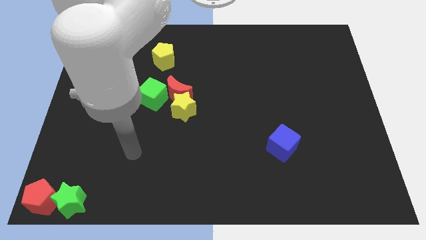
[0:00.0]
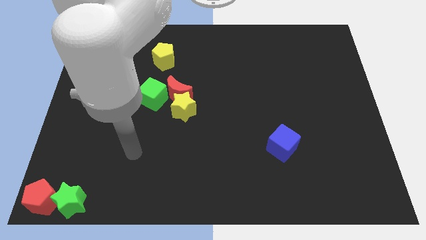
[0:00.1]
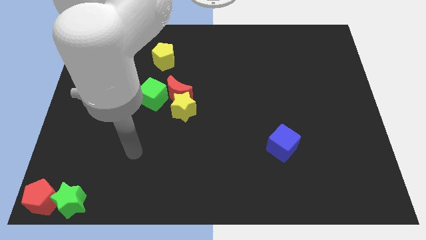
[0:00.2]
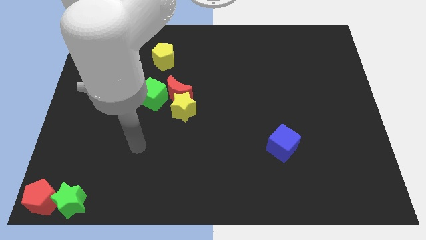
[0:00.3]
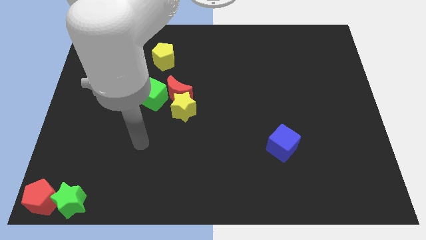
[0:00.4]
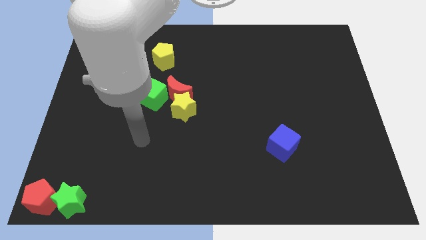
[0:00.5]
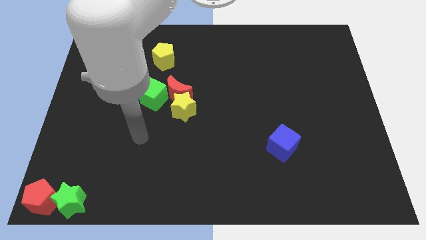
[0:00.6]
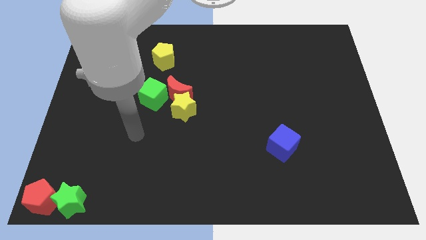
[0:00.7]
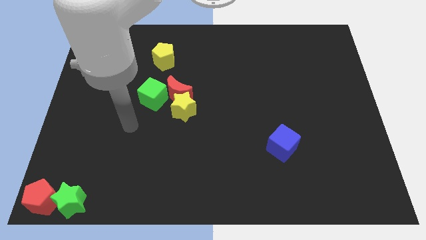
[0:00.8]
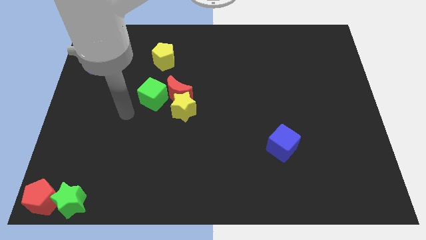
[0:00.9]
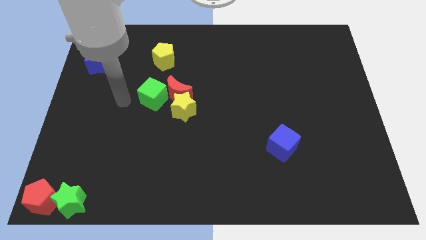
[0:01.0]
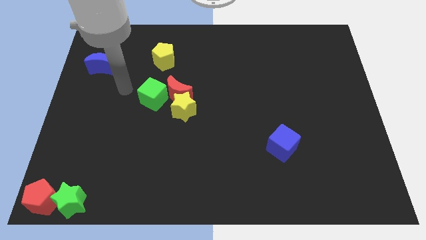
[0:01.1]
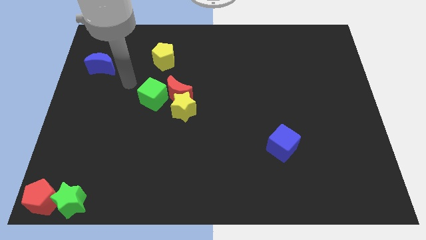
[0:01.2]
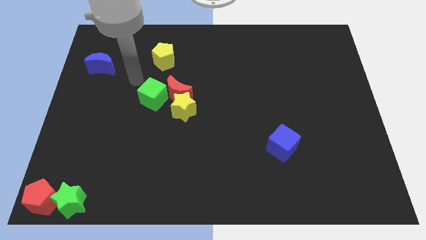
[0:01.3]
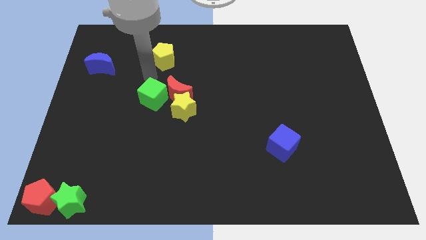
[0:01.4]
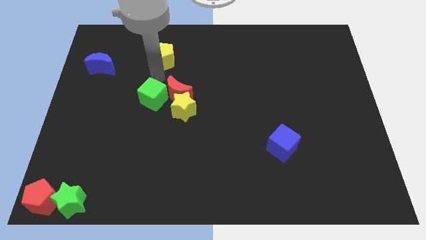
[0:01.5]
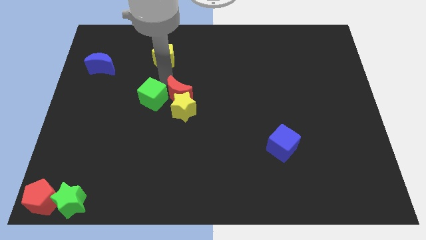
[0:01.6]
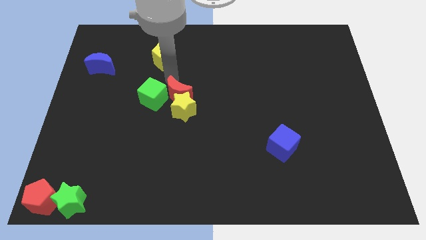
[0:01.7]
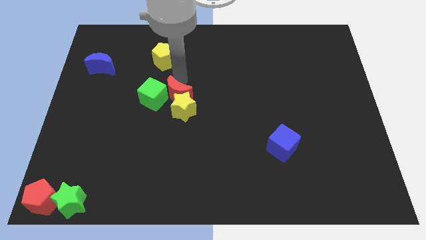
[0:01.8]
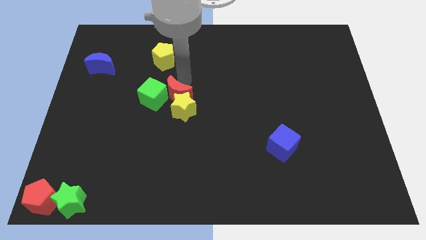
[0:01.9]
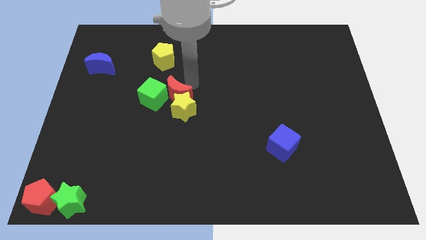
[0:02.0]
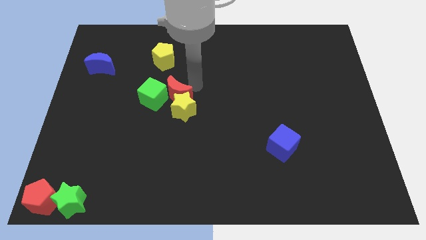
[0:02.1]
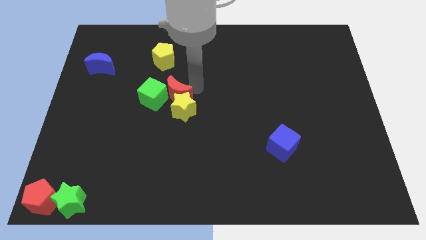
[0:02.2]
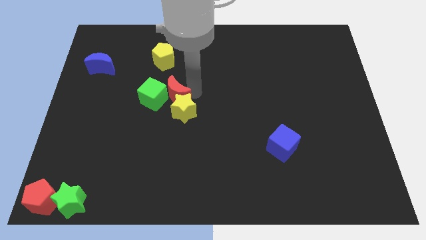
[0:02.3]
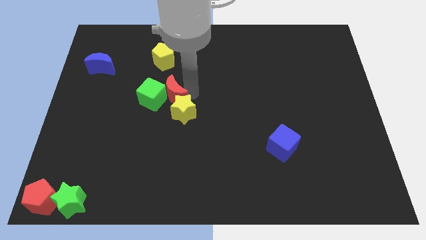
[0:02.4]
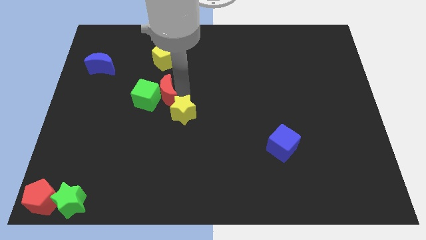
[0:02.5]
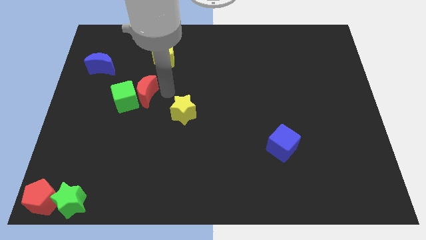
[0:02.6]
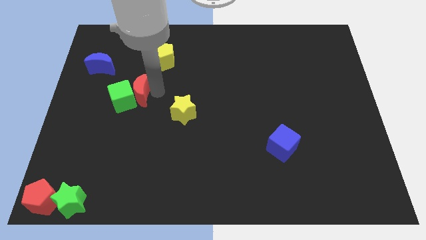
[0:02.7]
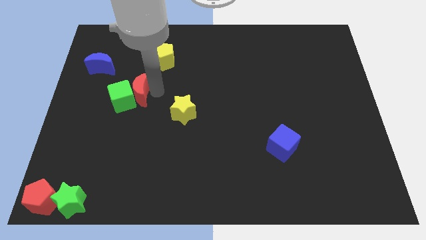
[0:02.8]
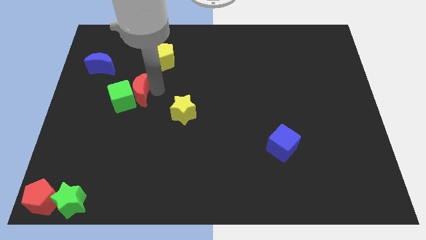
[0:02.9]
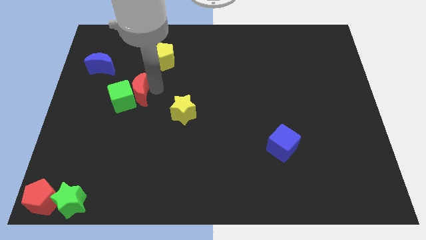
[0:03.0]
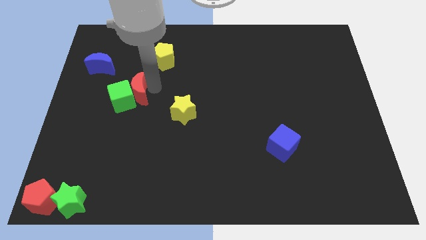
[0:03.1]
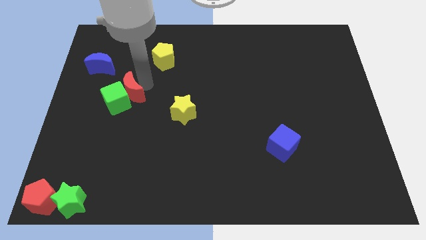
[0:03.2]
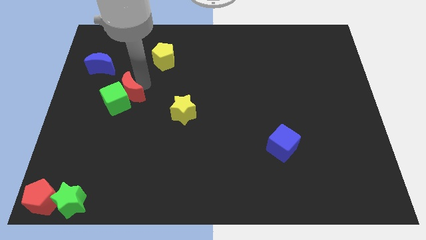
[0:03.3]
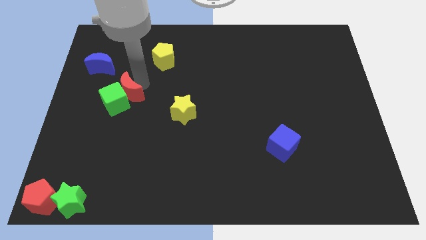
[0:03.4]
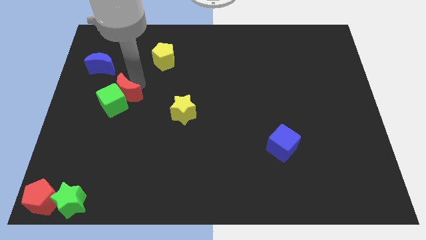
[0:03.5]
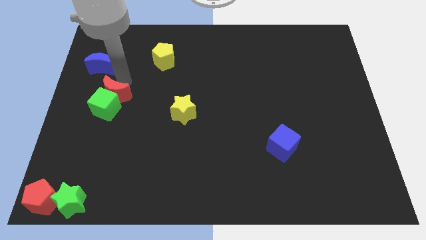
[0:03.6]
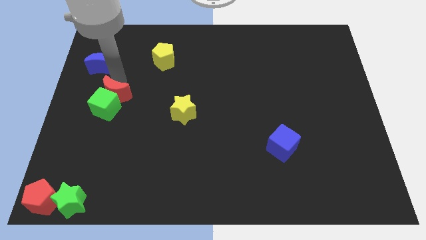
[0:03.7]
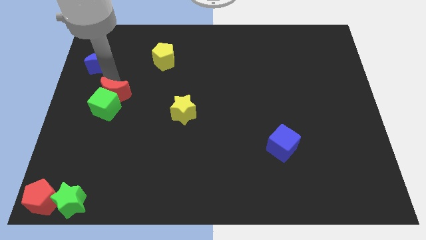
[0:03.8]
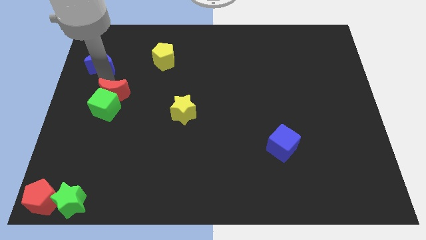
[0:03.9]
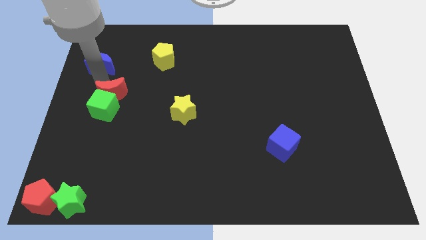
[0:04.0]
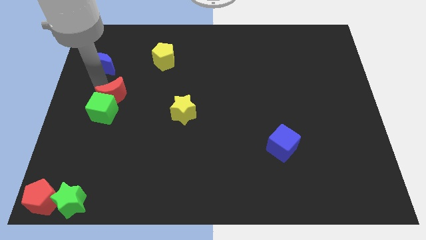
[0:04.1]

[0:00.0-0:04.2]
push the red moon and green cube to the left center

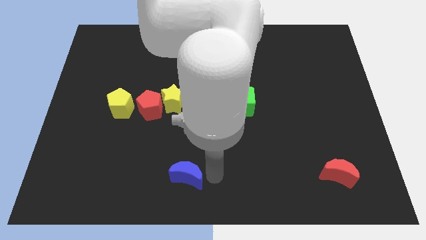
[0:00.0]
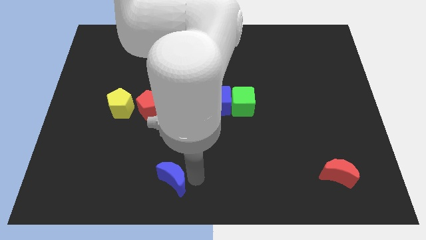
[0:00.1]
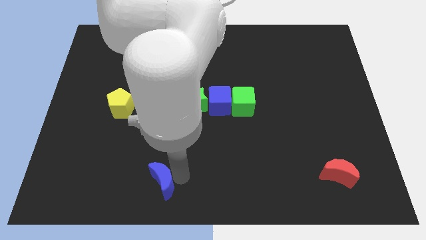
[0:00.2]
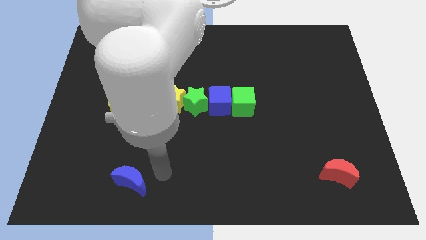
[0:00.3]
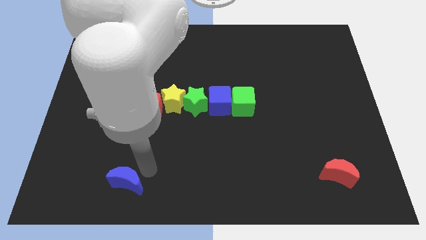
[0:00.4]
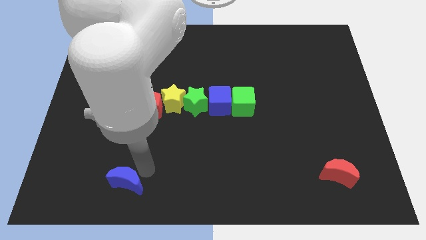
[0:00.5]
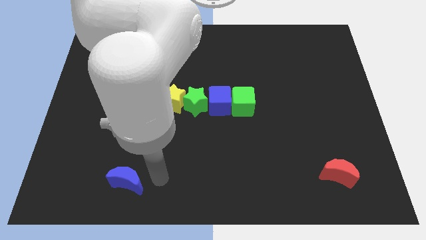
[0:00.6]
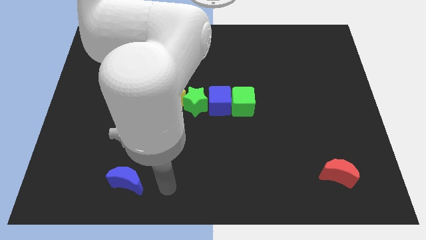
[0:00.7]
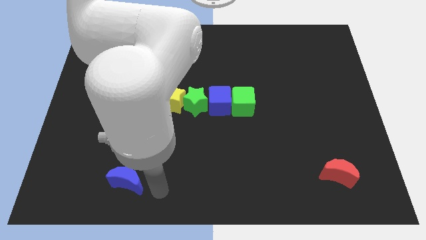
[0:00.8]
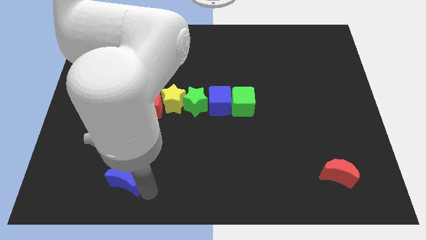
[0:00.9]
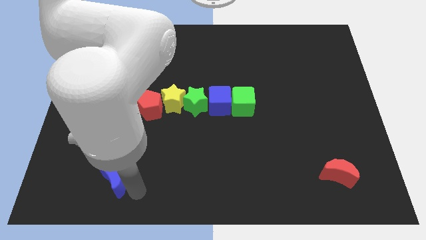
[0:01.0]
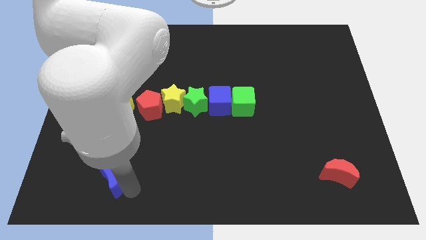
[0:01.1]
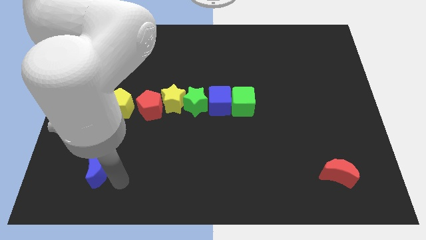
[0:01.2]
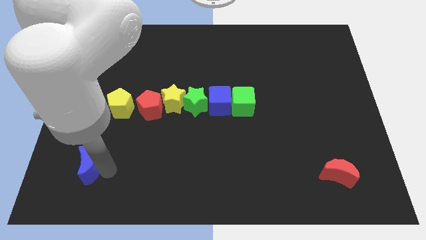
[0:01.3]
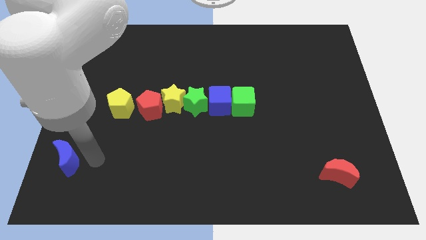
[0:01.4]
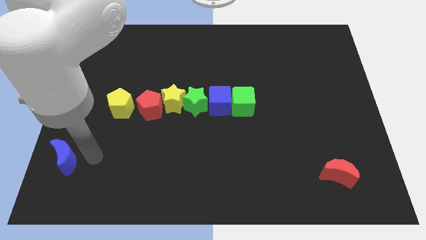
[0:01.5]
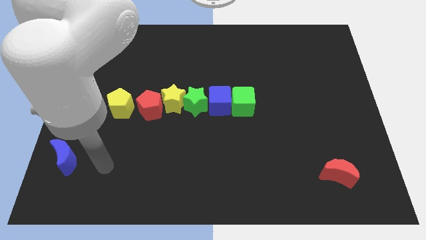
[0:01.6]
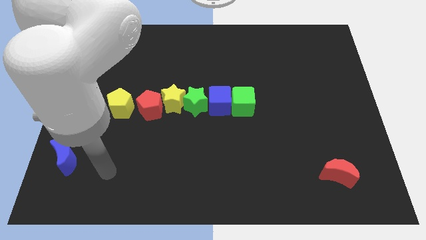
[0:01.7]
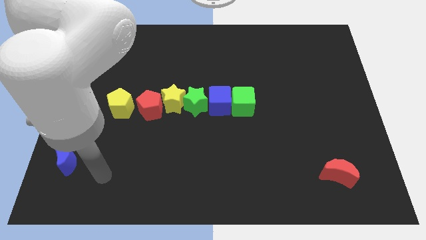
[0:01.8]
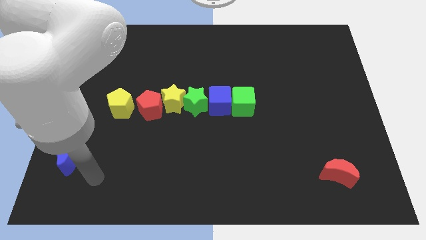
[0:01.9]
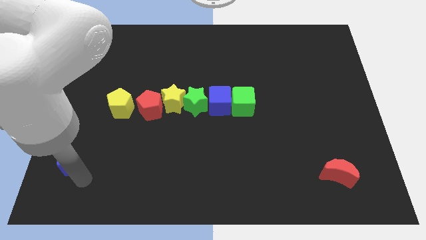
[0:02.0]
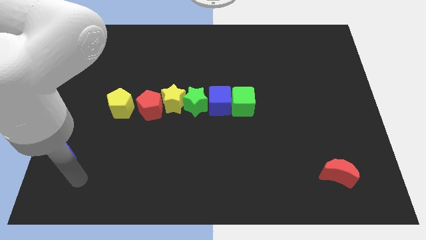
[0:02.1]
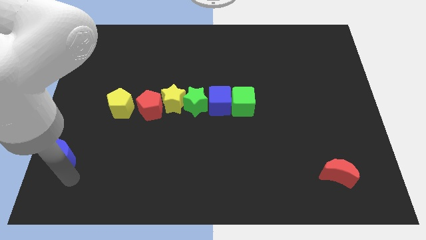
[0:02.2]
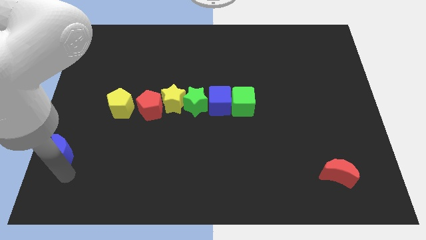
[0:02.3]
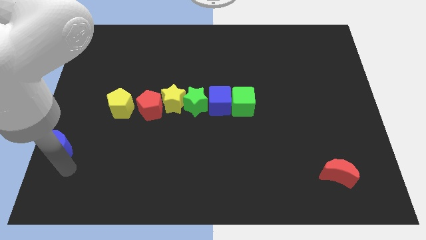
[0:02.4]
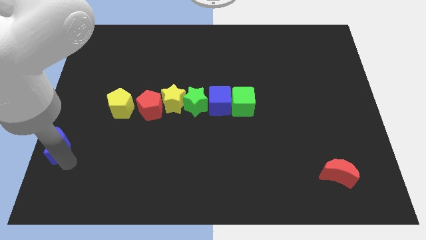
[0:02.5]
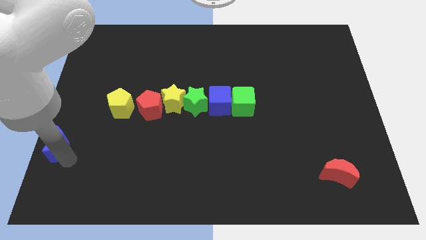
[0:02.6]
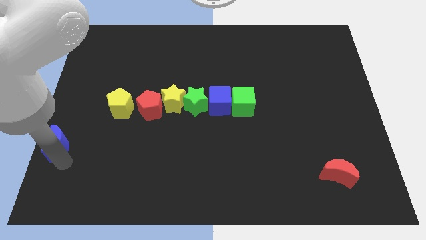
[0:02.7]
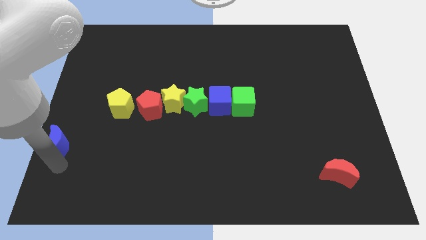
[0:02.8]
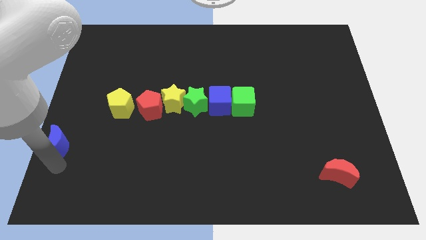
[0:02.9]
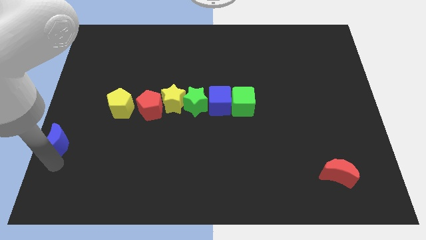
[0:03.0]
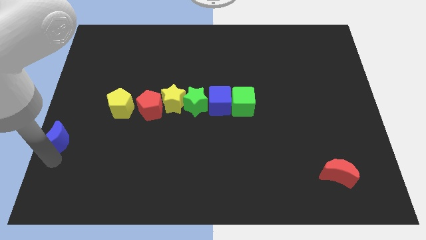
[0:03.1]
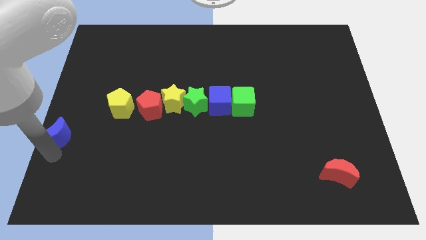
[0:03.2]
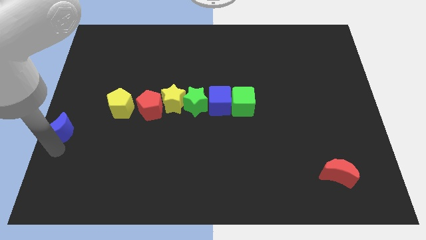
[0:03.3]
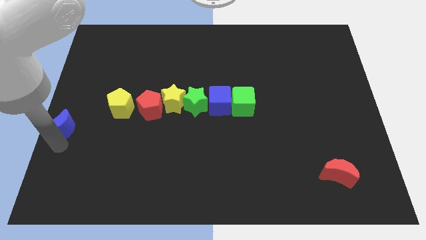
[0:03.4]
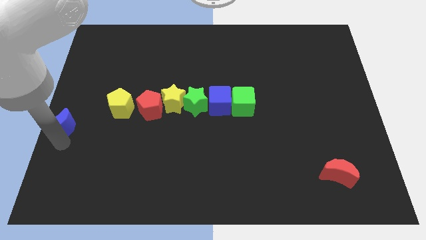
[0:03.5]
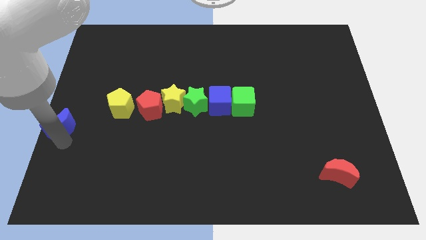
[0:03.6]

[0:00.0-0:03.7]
move the blue crescent towards the center left

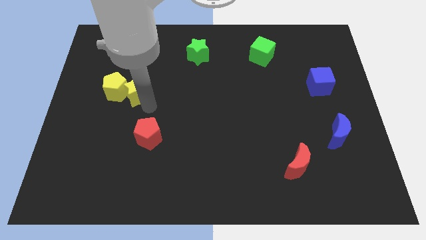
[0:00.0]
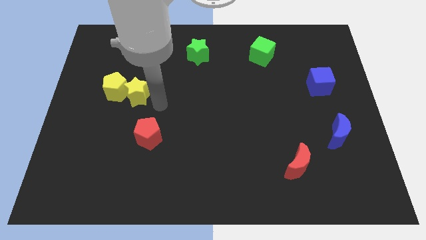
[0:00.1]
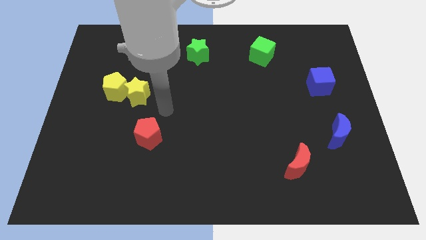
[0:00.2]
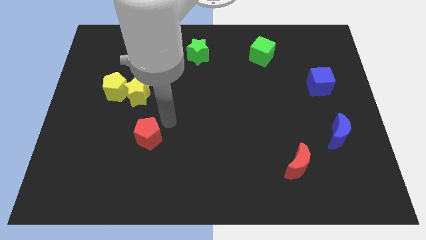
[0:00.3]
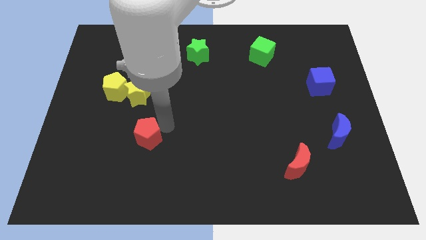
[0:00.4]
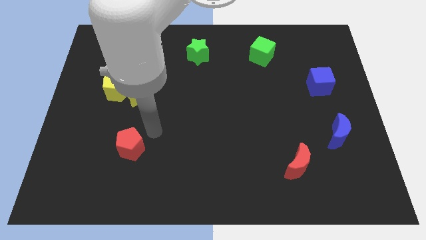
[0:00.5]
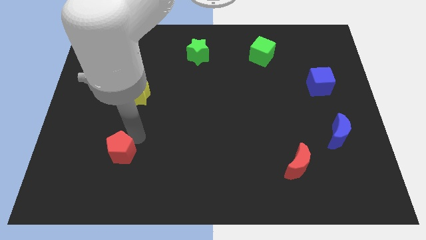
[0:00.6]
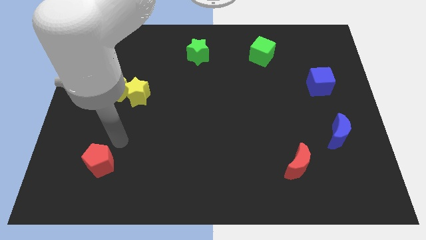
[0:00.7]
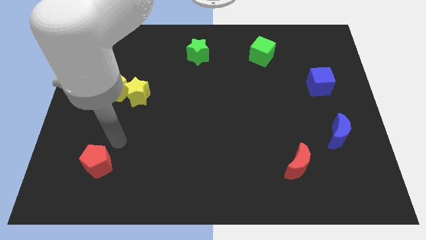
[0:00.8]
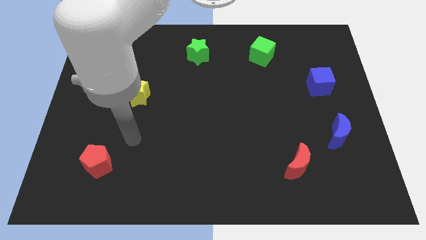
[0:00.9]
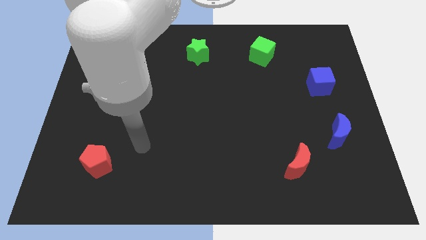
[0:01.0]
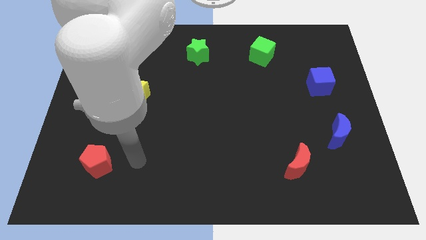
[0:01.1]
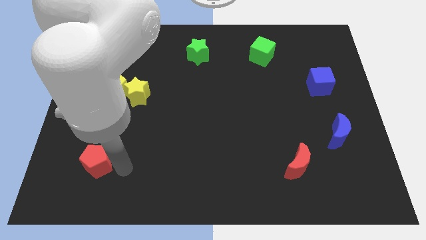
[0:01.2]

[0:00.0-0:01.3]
move red pentagon towards the bottom left corner
